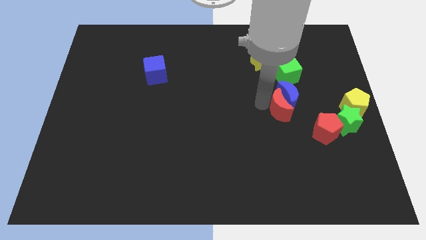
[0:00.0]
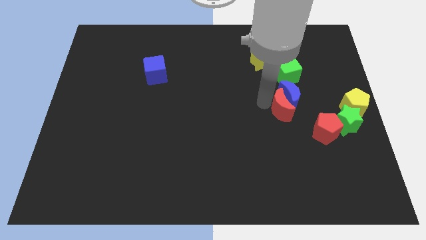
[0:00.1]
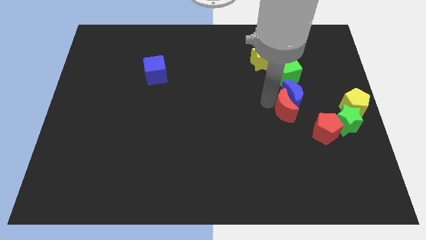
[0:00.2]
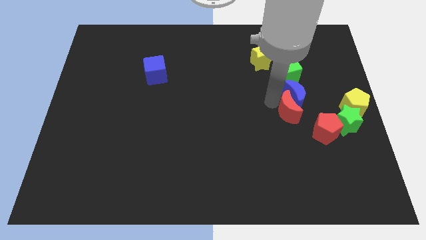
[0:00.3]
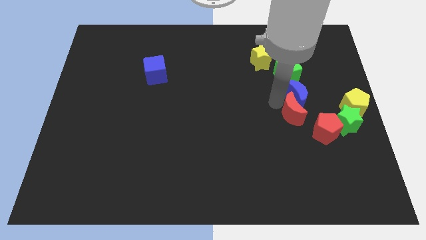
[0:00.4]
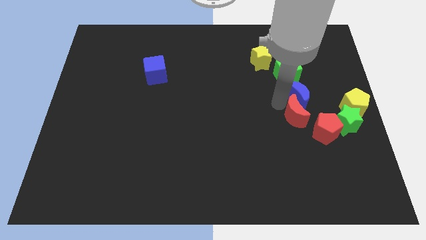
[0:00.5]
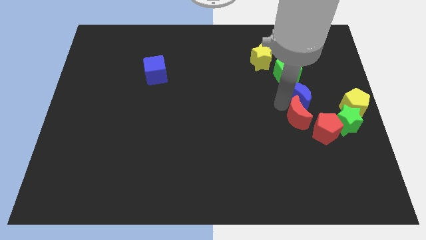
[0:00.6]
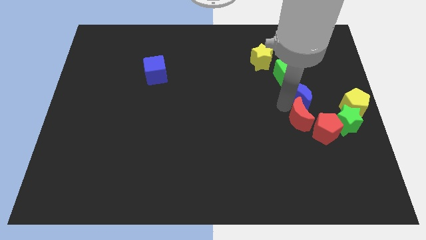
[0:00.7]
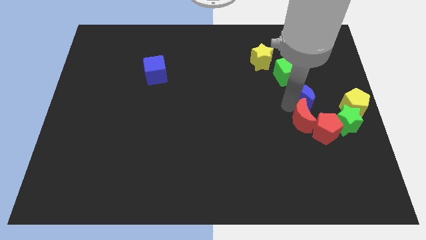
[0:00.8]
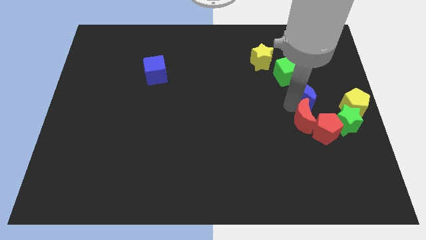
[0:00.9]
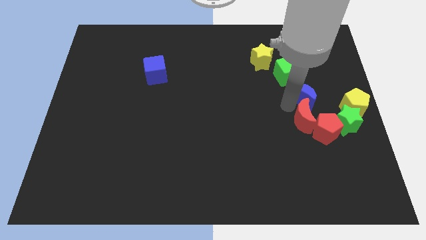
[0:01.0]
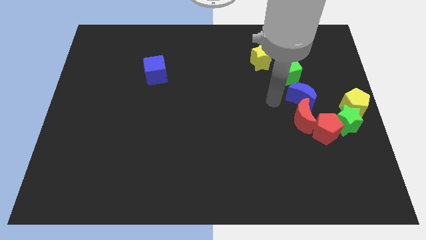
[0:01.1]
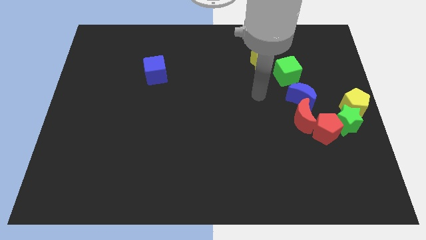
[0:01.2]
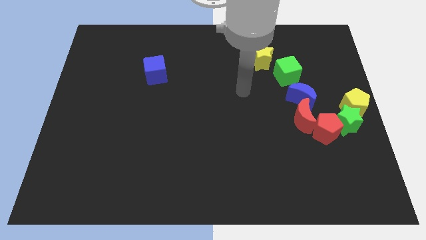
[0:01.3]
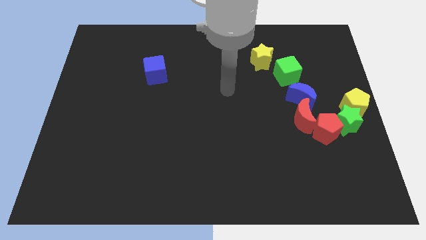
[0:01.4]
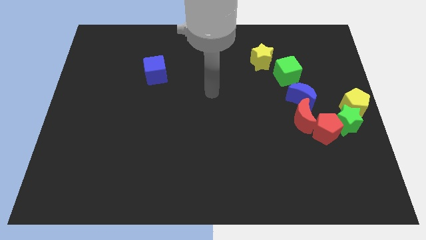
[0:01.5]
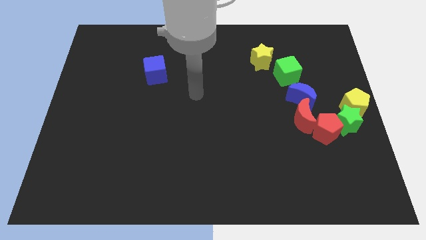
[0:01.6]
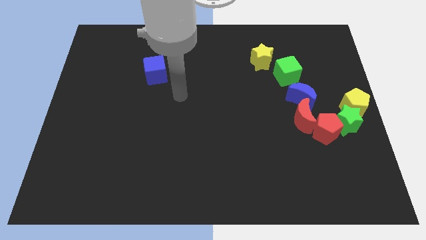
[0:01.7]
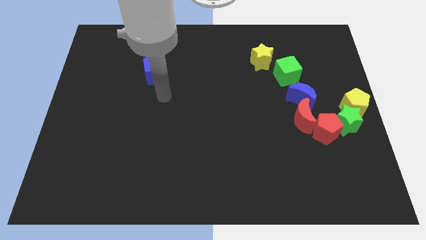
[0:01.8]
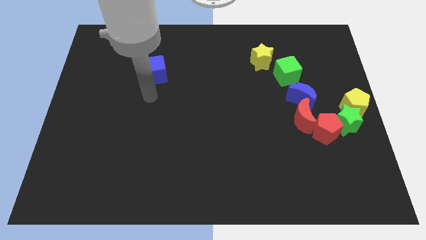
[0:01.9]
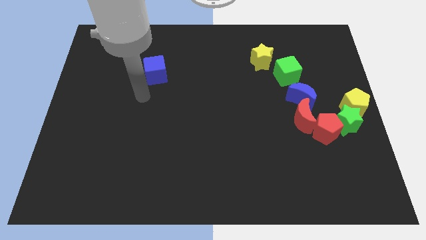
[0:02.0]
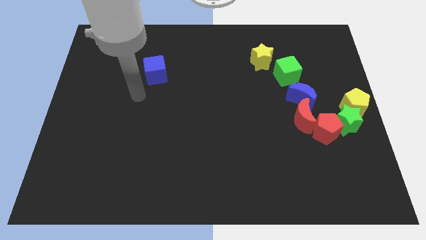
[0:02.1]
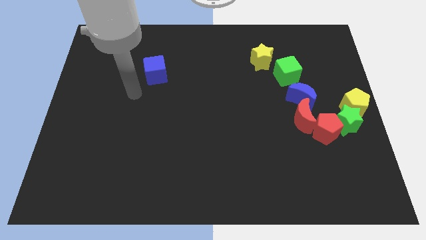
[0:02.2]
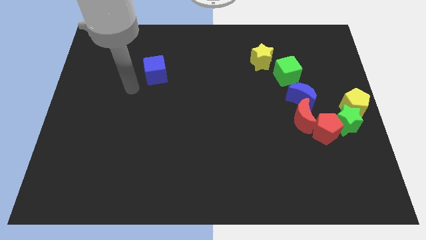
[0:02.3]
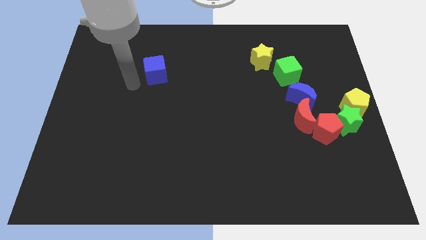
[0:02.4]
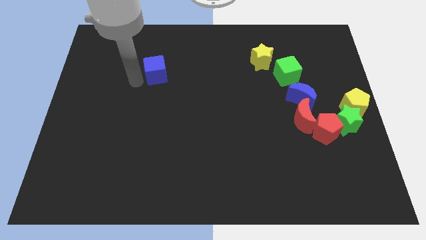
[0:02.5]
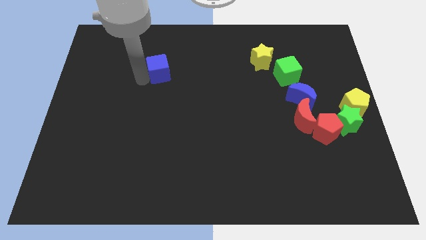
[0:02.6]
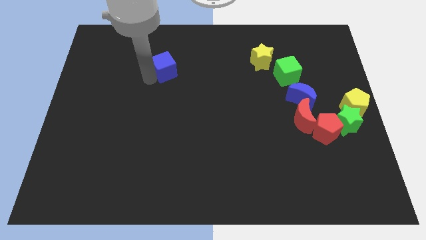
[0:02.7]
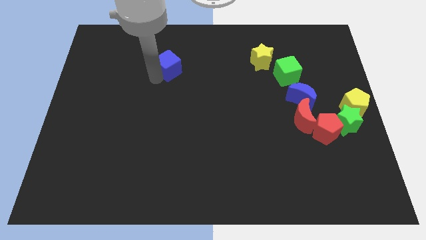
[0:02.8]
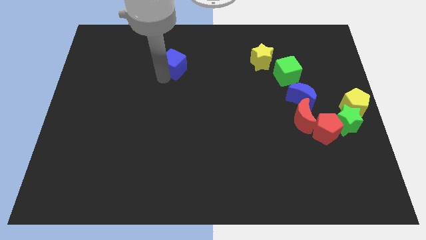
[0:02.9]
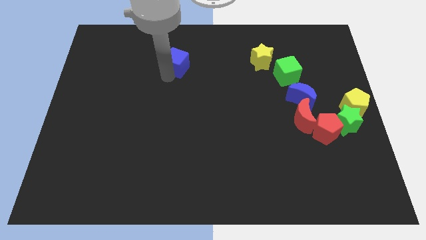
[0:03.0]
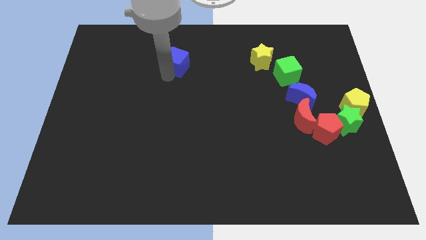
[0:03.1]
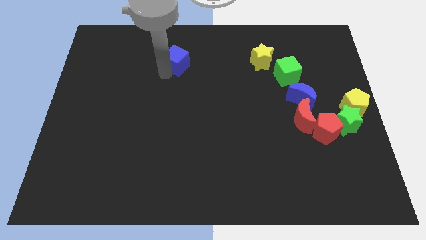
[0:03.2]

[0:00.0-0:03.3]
place the blue moon down to the green cube

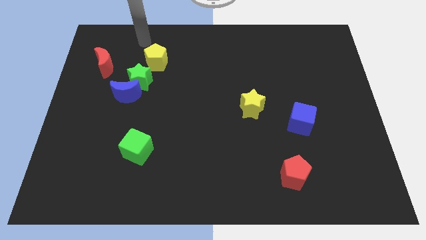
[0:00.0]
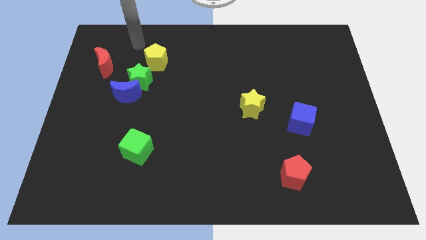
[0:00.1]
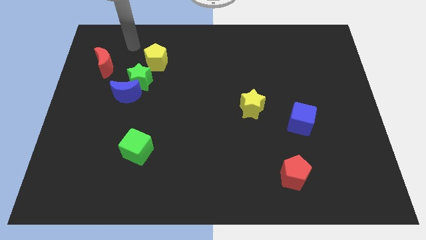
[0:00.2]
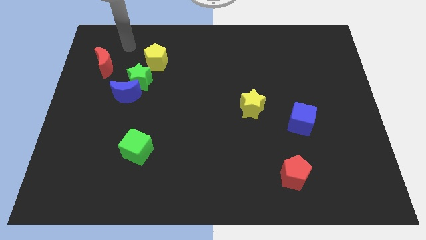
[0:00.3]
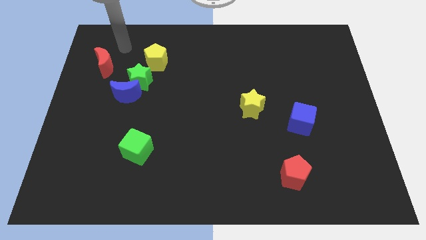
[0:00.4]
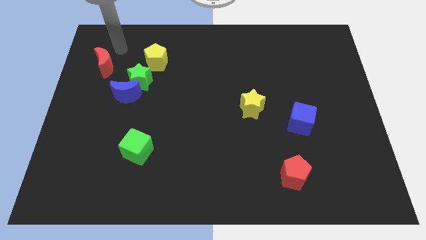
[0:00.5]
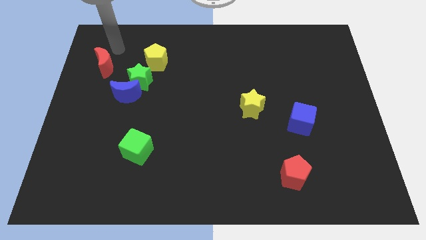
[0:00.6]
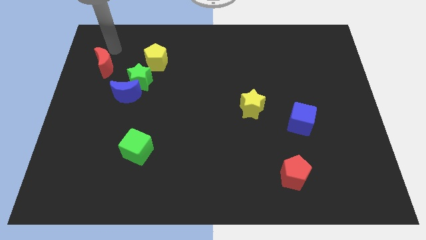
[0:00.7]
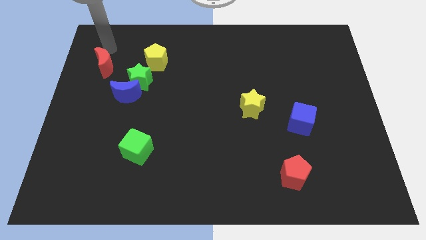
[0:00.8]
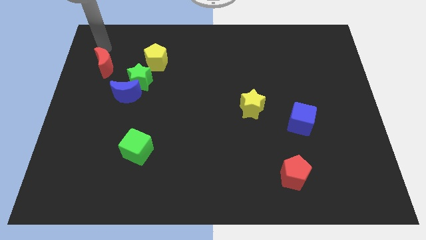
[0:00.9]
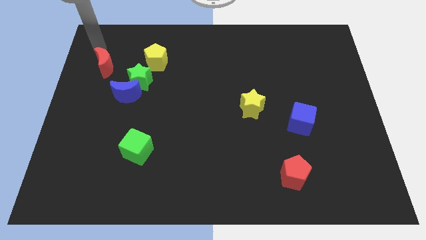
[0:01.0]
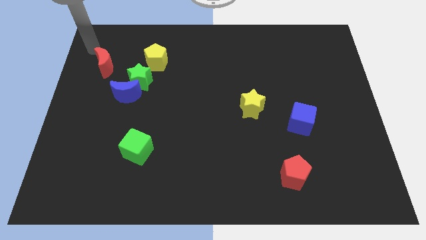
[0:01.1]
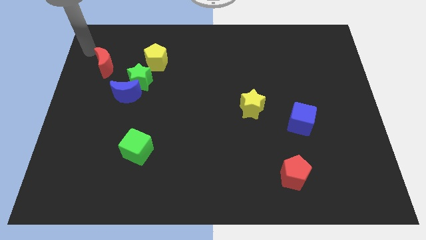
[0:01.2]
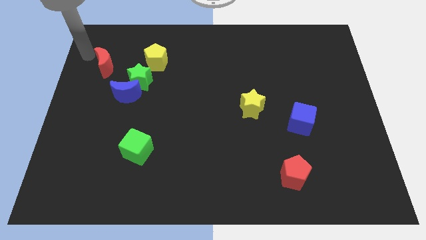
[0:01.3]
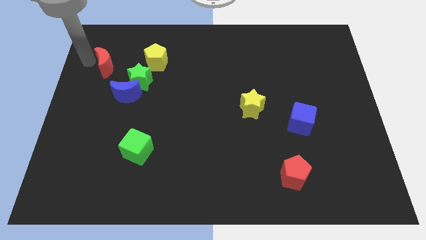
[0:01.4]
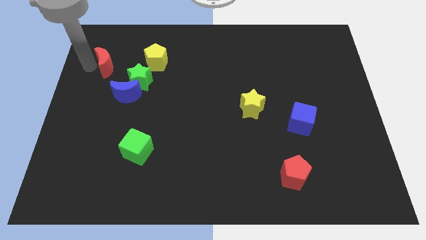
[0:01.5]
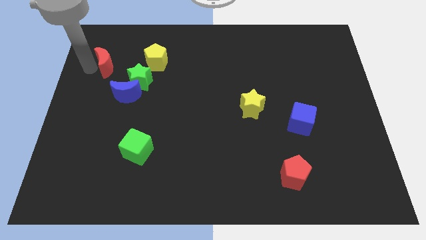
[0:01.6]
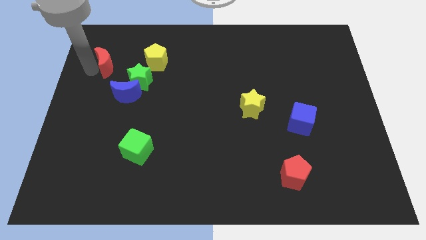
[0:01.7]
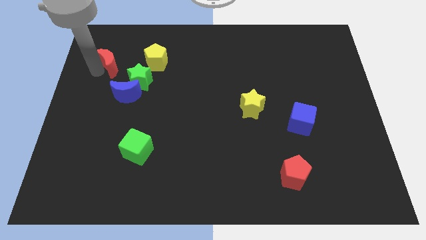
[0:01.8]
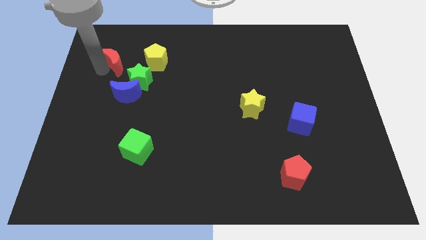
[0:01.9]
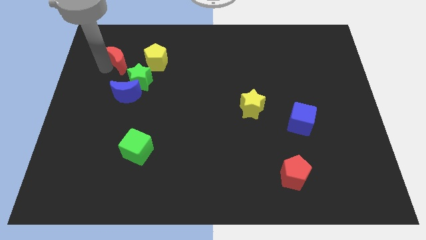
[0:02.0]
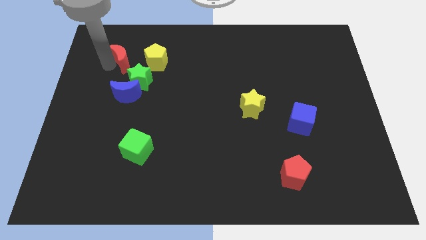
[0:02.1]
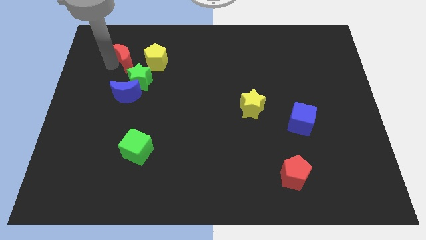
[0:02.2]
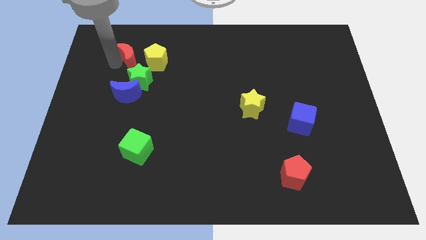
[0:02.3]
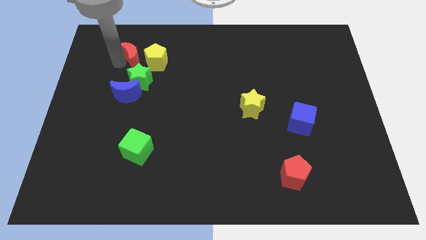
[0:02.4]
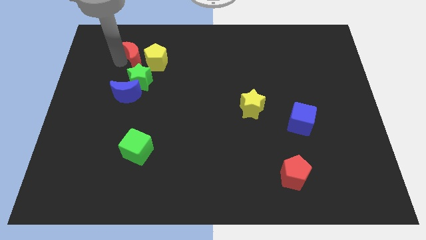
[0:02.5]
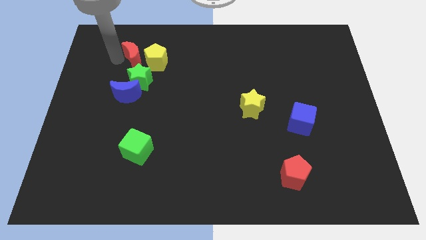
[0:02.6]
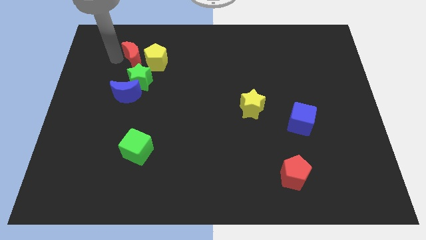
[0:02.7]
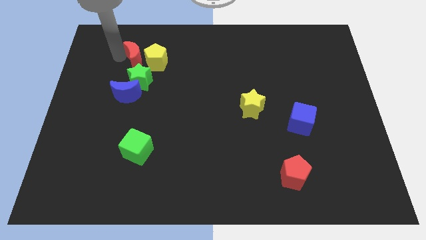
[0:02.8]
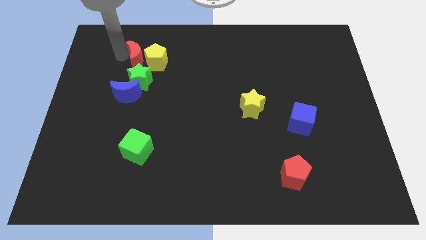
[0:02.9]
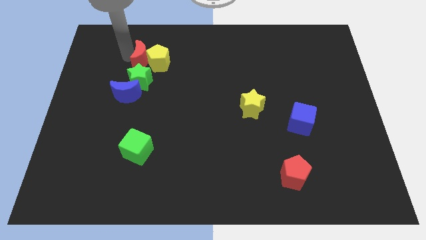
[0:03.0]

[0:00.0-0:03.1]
push red moon into yellow pentagon

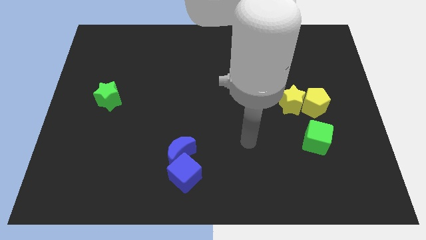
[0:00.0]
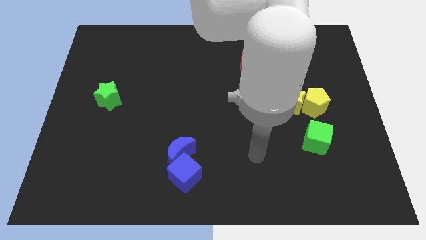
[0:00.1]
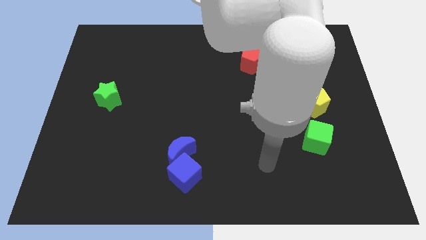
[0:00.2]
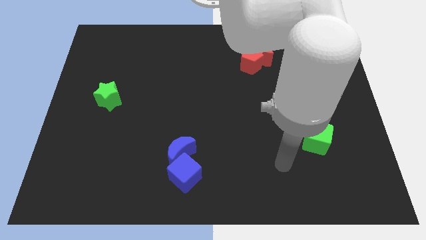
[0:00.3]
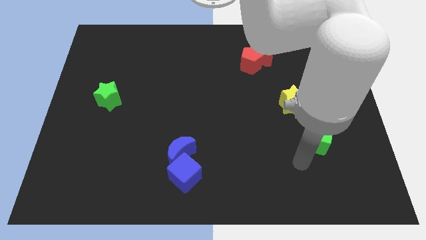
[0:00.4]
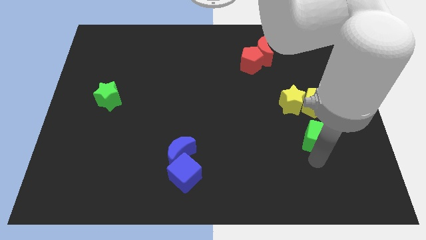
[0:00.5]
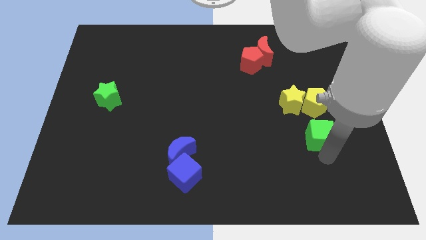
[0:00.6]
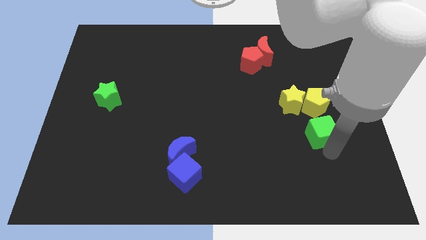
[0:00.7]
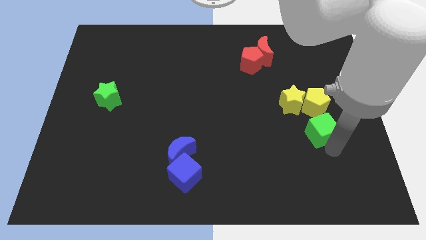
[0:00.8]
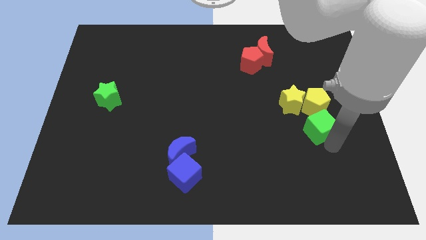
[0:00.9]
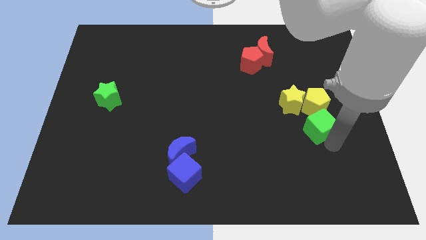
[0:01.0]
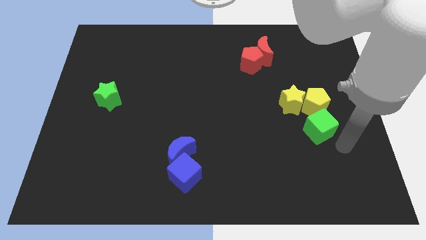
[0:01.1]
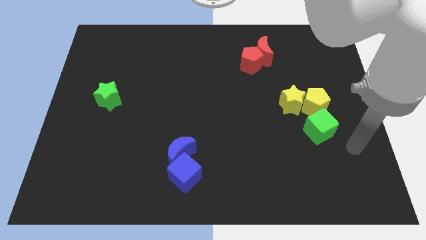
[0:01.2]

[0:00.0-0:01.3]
move the green cube towards the yellow pentagon

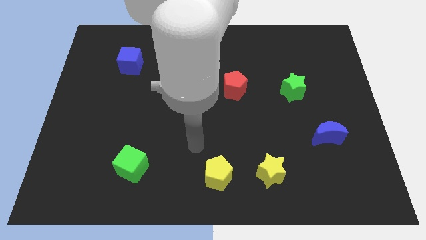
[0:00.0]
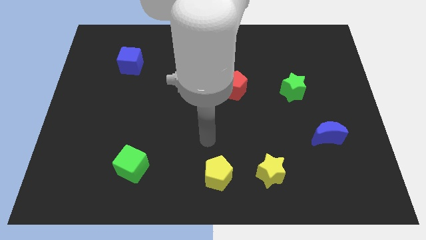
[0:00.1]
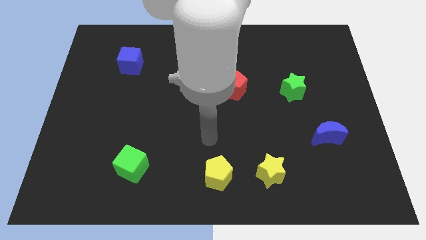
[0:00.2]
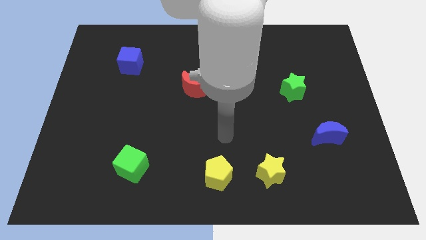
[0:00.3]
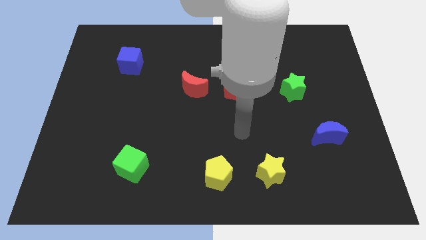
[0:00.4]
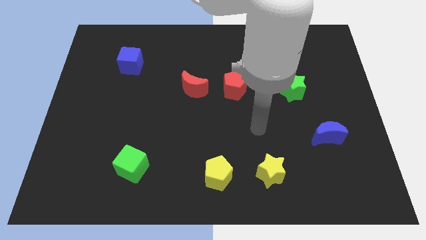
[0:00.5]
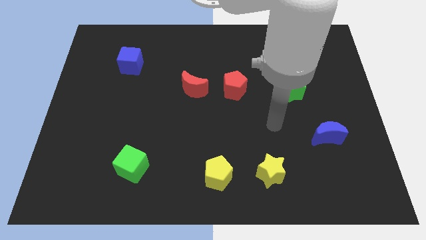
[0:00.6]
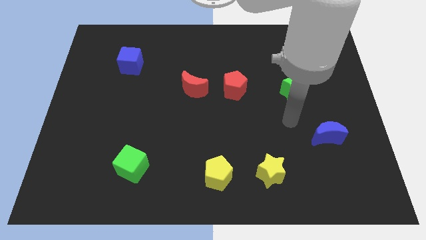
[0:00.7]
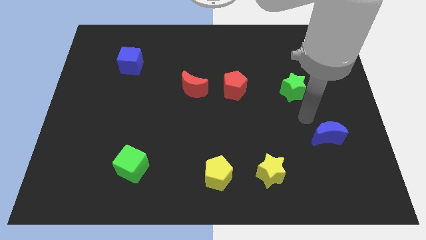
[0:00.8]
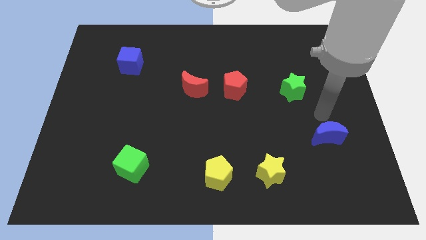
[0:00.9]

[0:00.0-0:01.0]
go near the blue moon

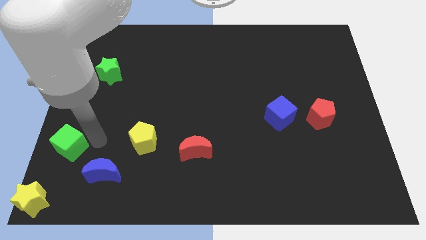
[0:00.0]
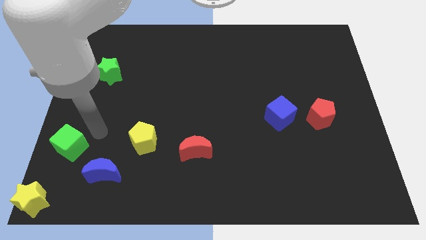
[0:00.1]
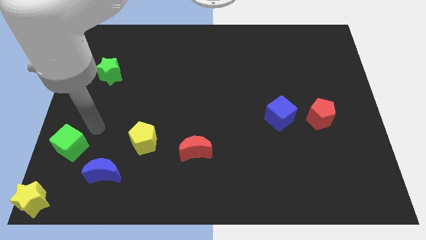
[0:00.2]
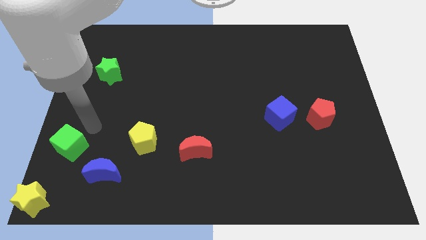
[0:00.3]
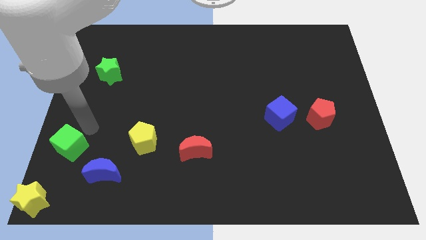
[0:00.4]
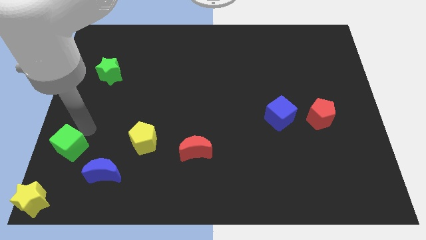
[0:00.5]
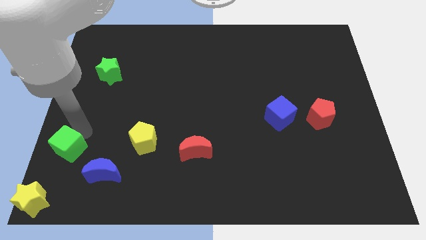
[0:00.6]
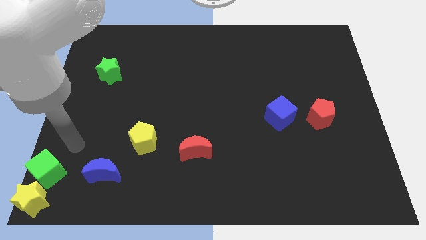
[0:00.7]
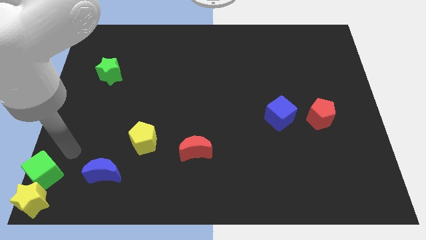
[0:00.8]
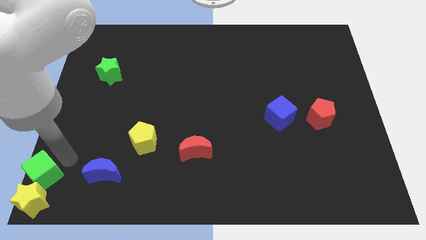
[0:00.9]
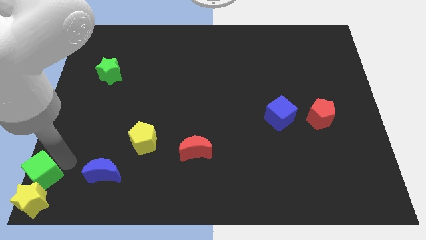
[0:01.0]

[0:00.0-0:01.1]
move green cube above the yellow star
